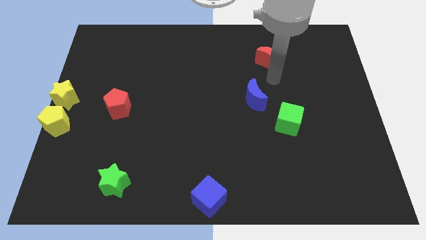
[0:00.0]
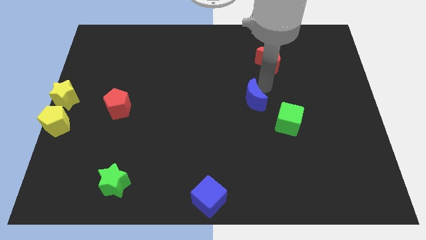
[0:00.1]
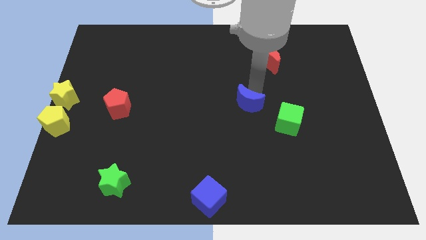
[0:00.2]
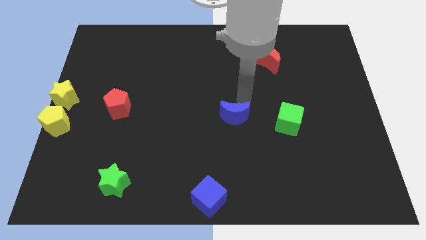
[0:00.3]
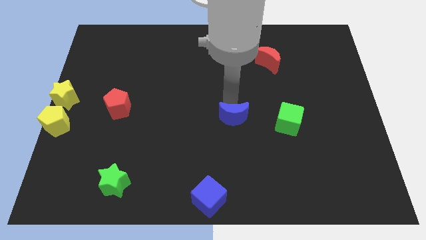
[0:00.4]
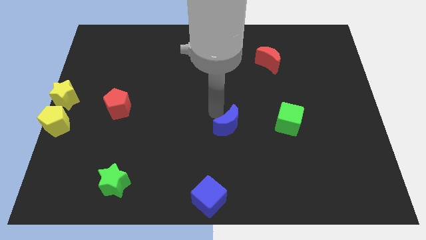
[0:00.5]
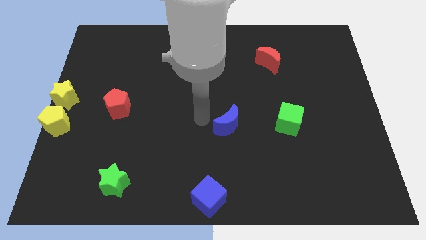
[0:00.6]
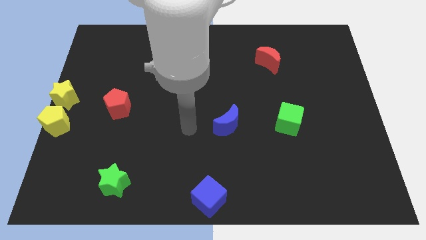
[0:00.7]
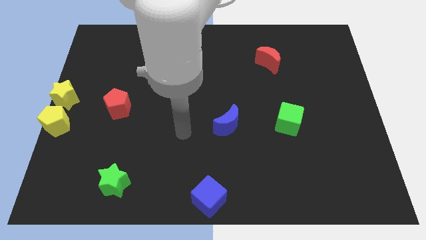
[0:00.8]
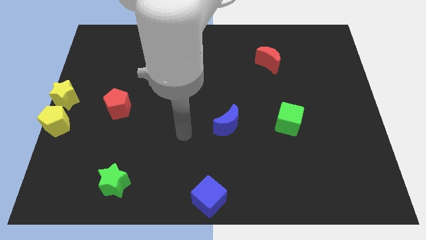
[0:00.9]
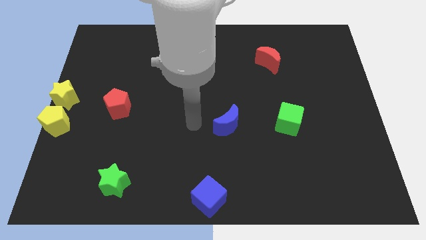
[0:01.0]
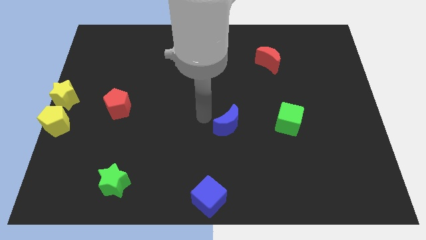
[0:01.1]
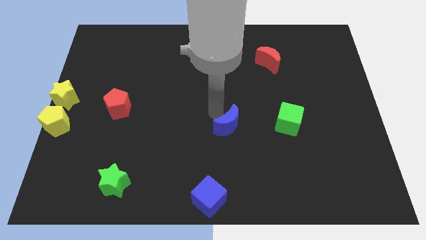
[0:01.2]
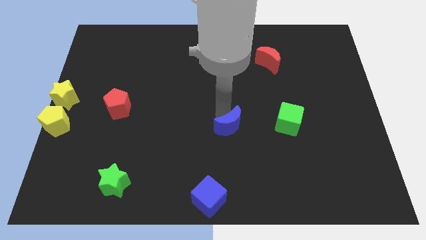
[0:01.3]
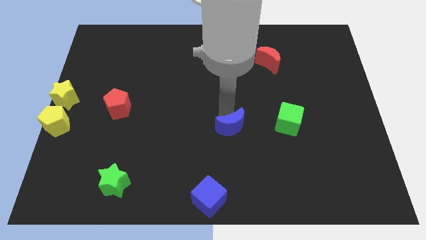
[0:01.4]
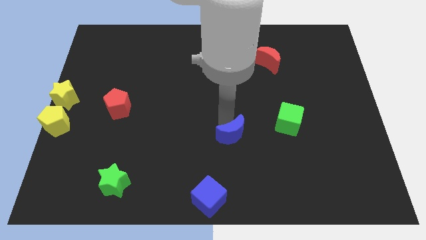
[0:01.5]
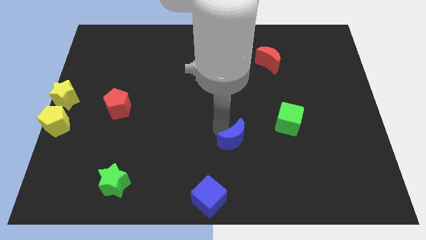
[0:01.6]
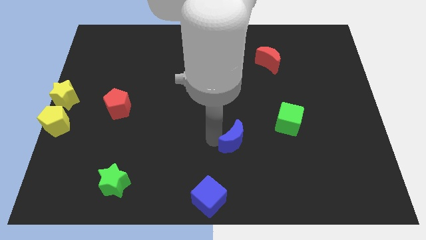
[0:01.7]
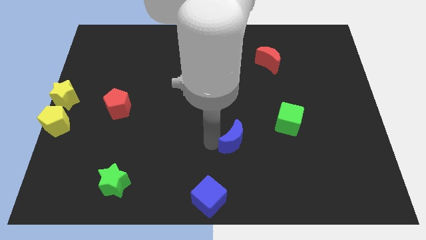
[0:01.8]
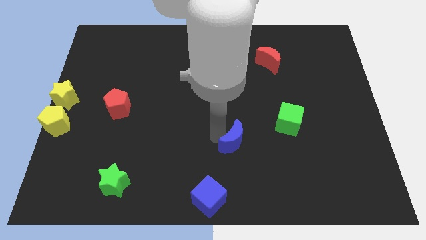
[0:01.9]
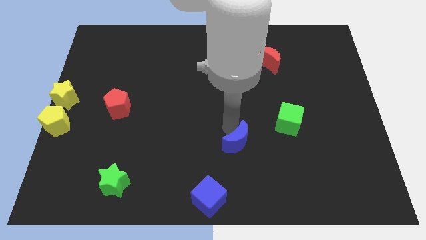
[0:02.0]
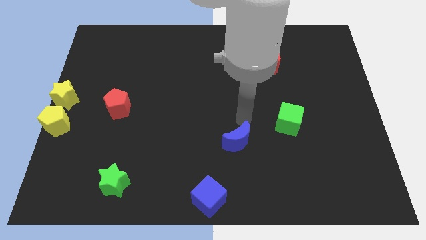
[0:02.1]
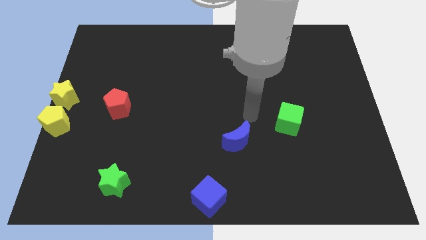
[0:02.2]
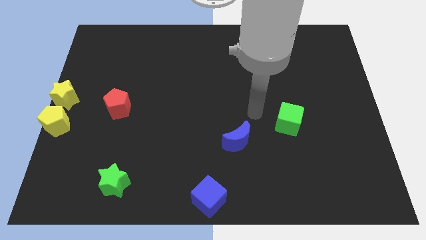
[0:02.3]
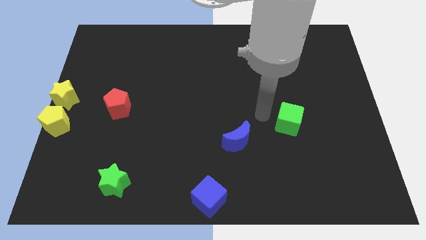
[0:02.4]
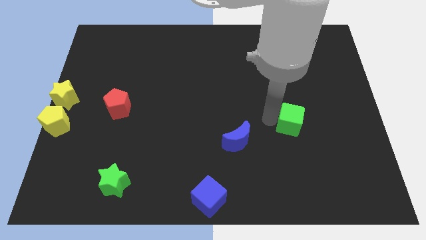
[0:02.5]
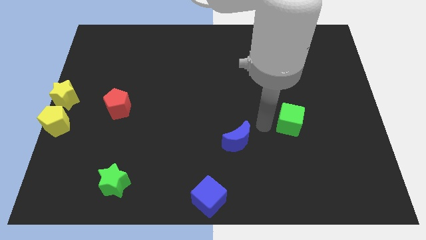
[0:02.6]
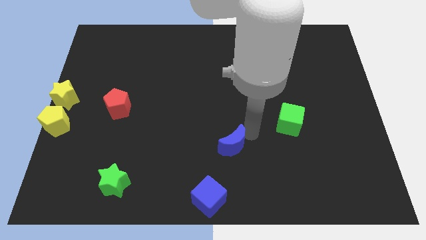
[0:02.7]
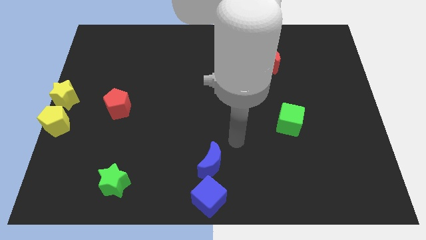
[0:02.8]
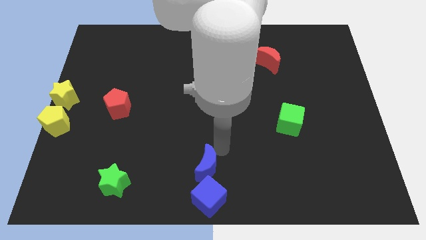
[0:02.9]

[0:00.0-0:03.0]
move blue moon above blue cube

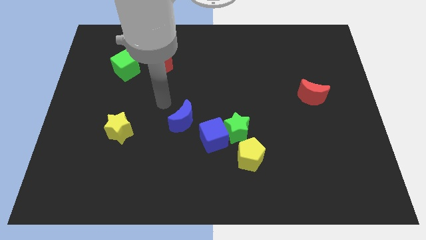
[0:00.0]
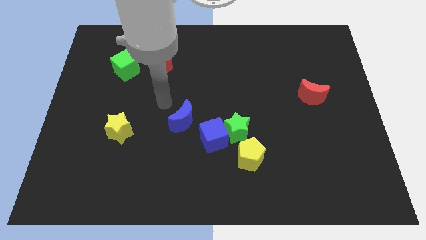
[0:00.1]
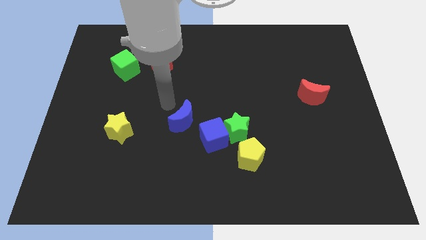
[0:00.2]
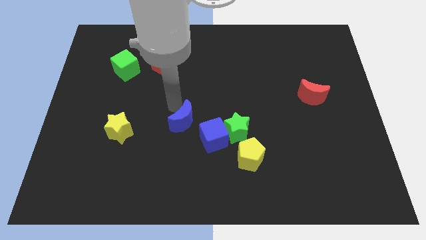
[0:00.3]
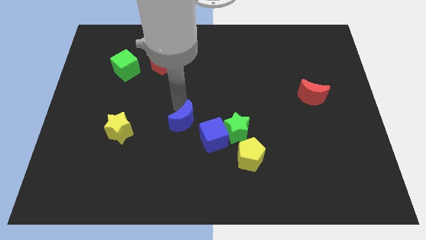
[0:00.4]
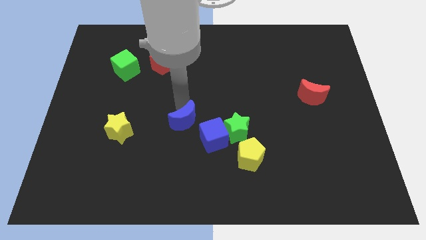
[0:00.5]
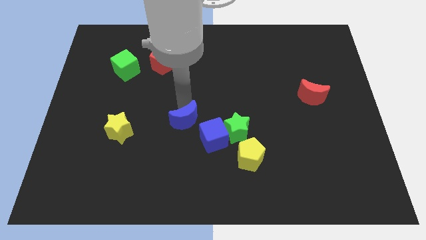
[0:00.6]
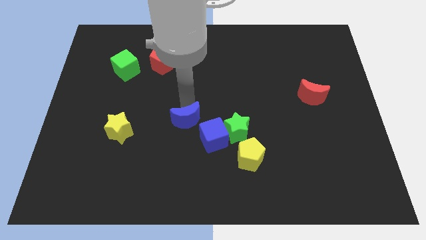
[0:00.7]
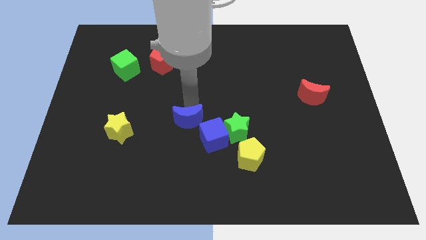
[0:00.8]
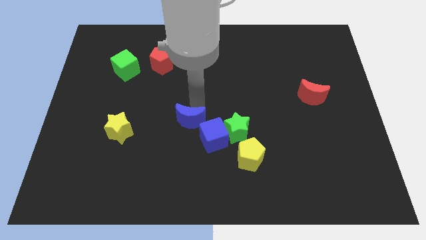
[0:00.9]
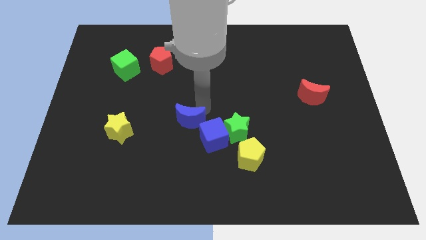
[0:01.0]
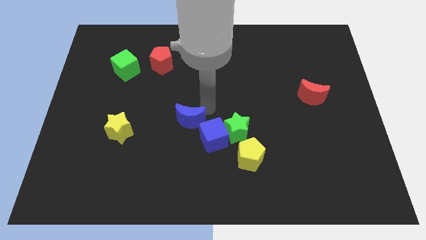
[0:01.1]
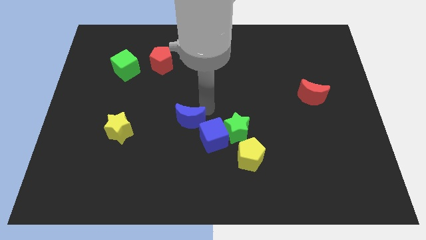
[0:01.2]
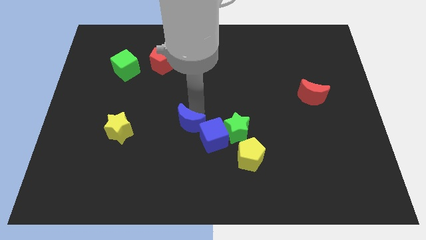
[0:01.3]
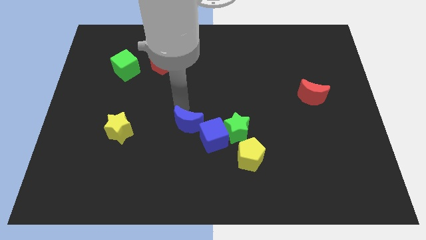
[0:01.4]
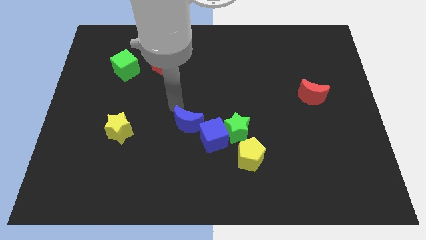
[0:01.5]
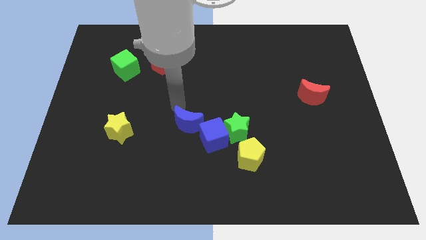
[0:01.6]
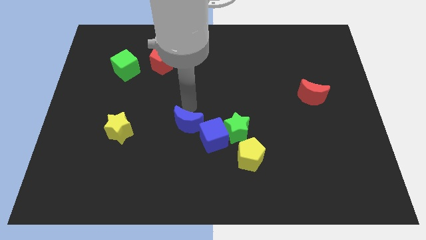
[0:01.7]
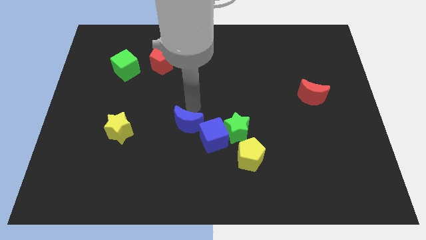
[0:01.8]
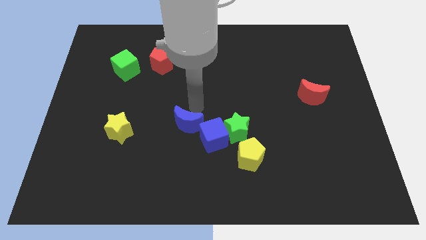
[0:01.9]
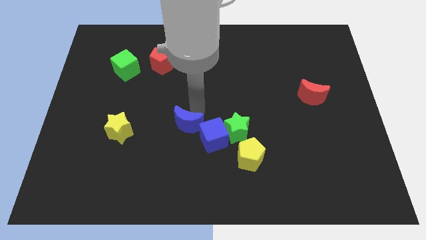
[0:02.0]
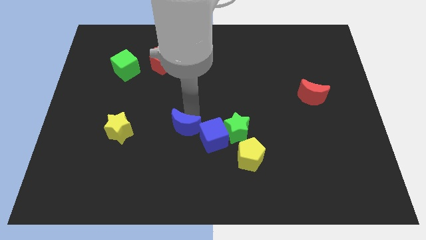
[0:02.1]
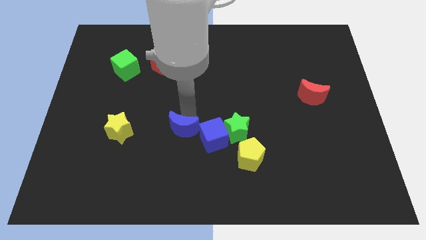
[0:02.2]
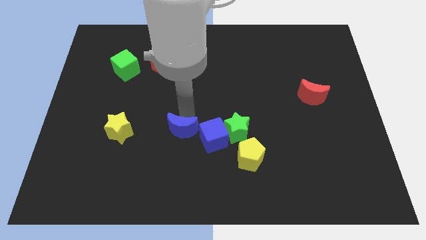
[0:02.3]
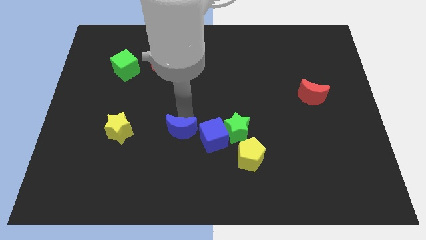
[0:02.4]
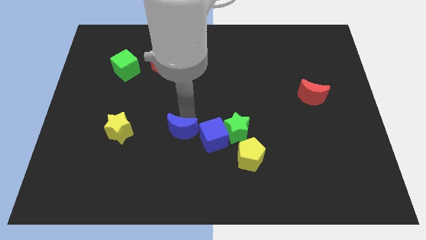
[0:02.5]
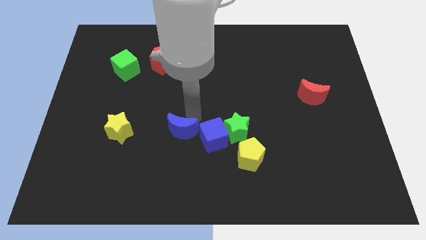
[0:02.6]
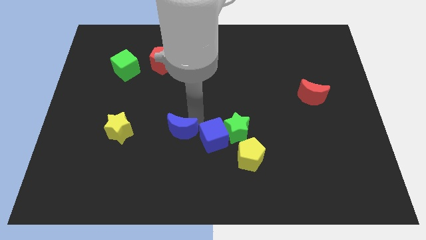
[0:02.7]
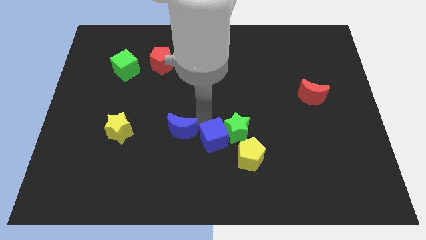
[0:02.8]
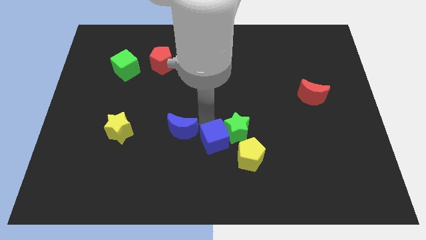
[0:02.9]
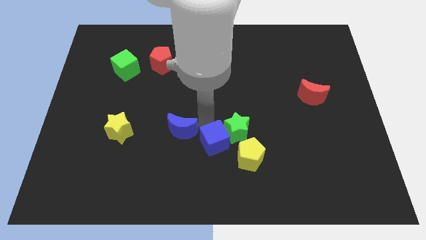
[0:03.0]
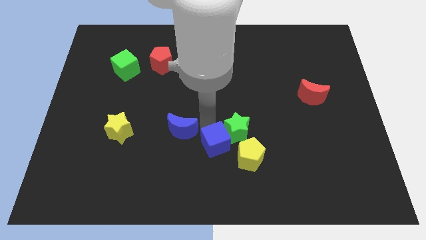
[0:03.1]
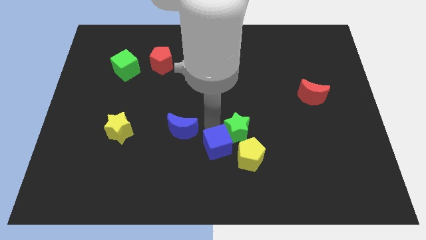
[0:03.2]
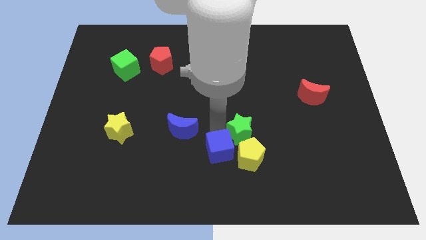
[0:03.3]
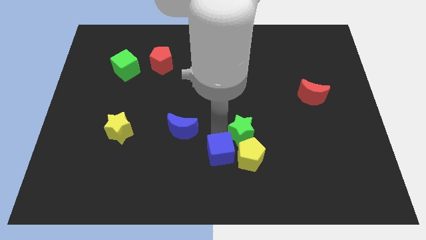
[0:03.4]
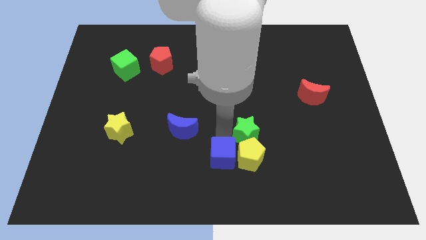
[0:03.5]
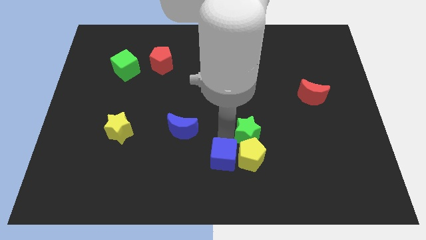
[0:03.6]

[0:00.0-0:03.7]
push the blue moon blue cube to the center

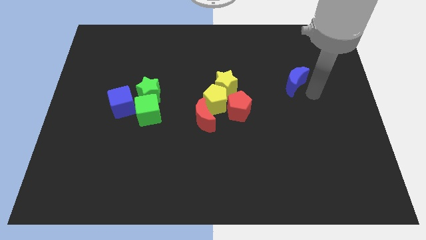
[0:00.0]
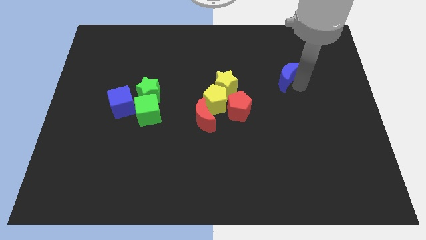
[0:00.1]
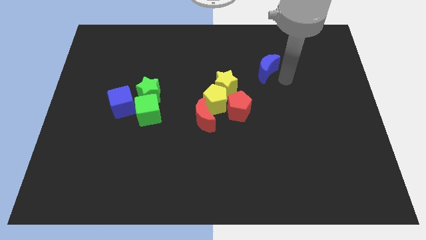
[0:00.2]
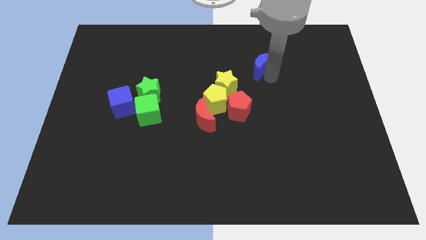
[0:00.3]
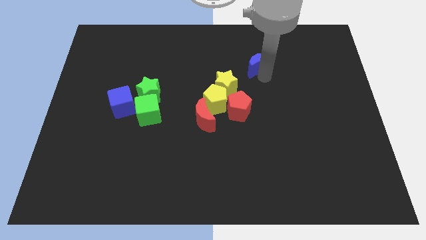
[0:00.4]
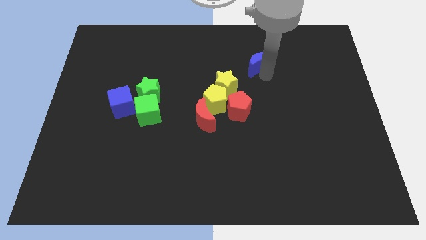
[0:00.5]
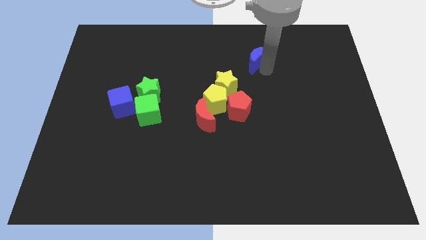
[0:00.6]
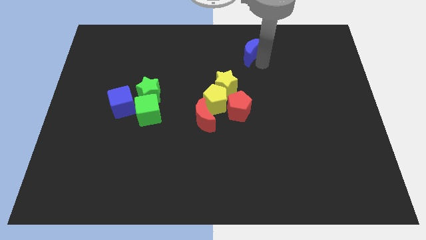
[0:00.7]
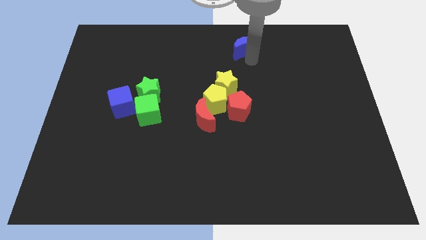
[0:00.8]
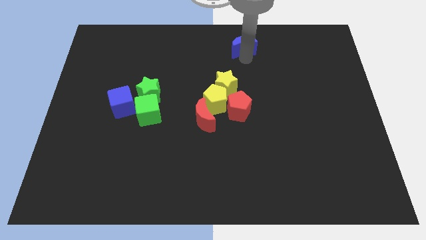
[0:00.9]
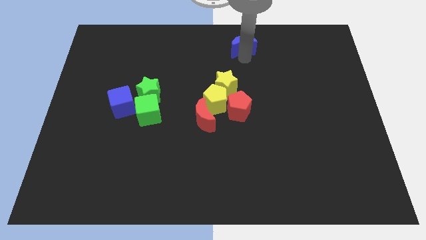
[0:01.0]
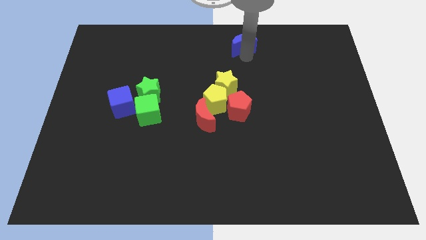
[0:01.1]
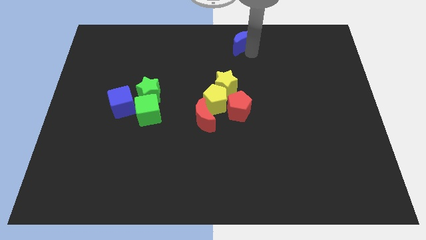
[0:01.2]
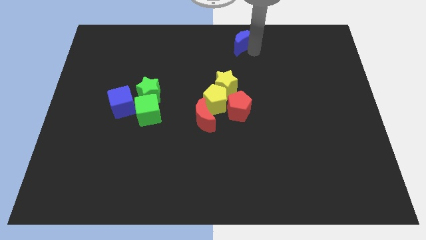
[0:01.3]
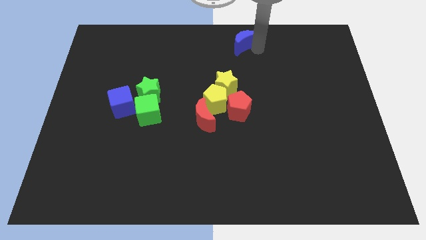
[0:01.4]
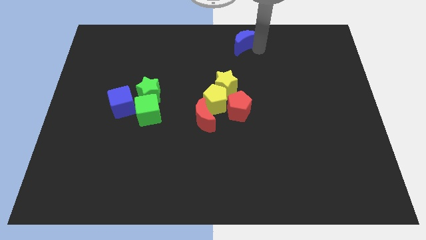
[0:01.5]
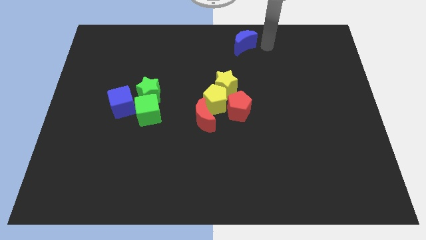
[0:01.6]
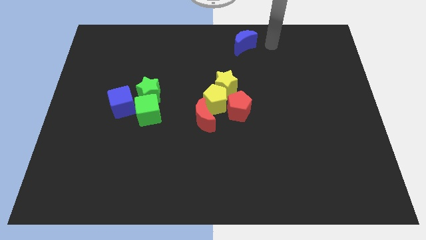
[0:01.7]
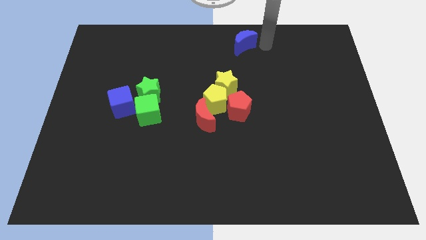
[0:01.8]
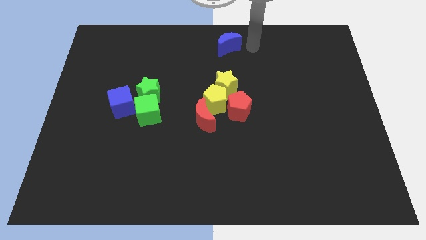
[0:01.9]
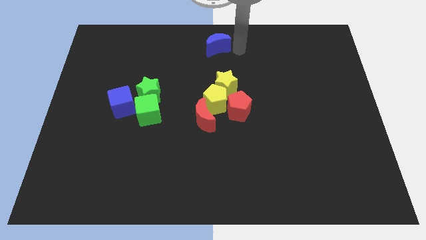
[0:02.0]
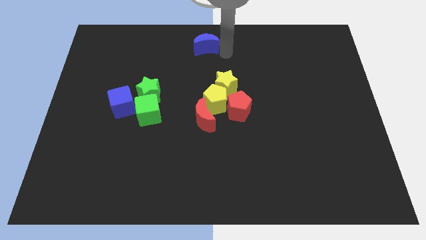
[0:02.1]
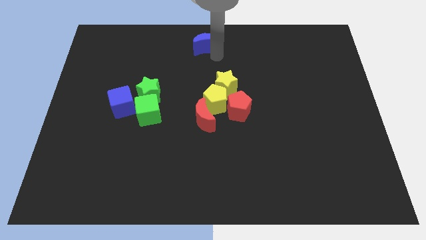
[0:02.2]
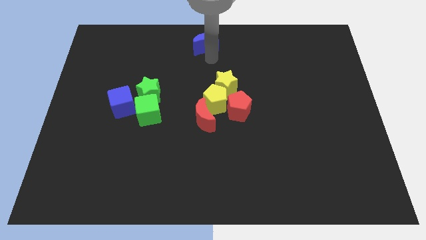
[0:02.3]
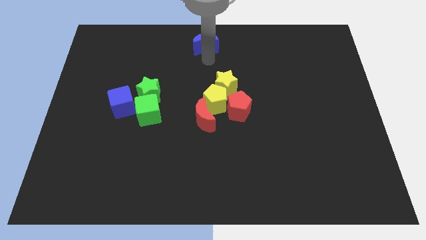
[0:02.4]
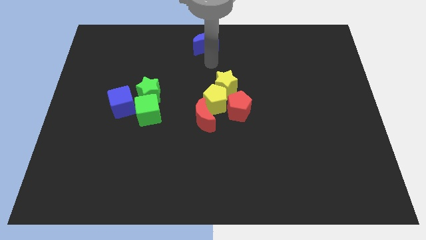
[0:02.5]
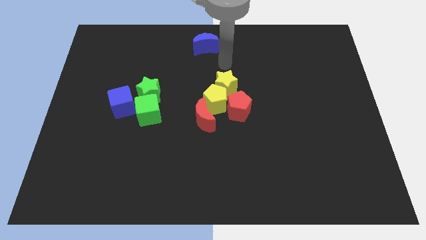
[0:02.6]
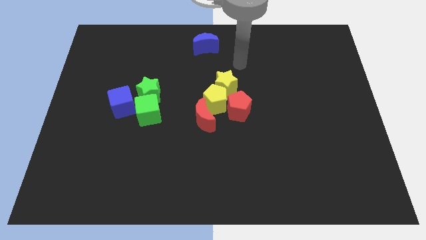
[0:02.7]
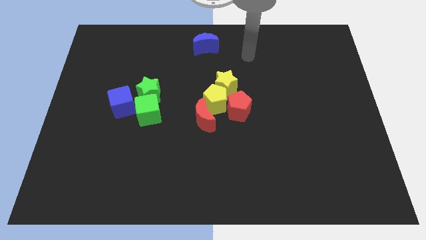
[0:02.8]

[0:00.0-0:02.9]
move the blue moon to the top center of the board
